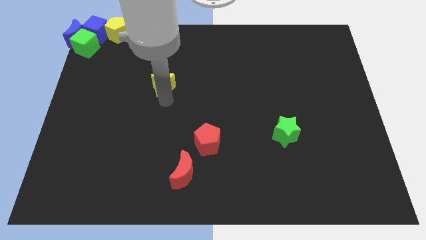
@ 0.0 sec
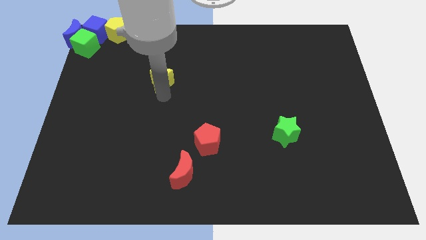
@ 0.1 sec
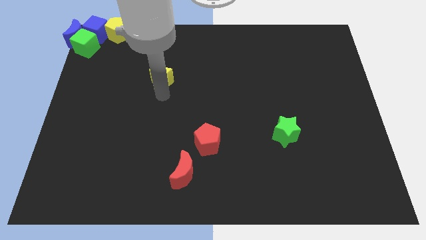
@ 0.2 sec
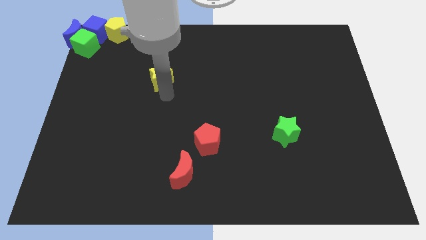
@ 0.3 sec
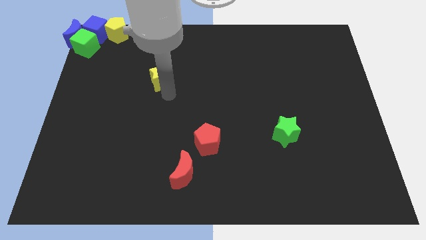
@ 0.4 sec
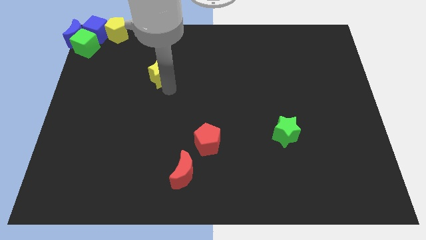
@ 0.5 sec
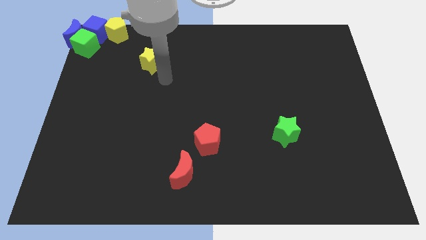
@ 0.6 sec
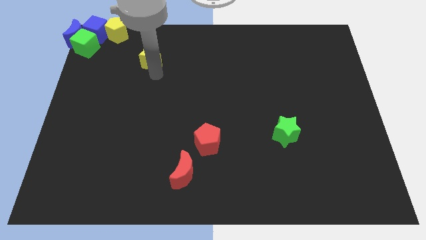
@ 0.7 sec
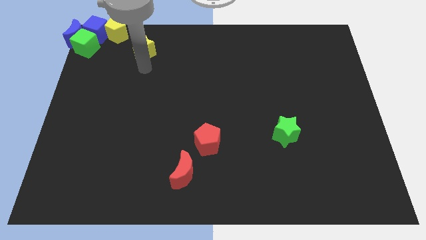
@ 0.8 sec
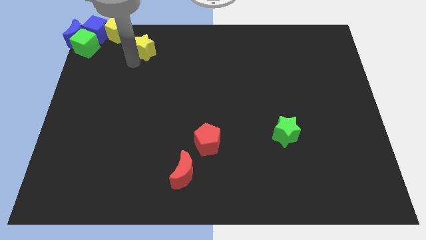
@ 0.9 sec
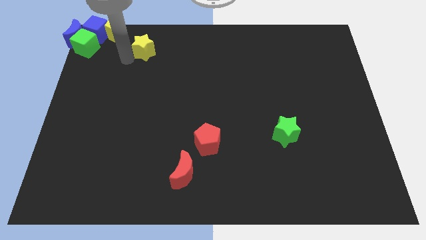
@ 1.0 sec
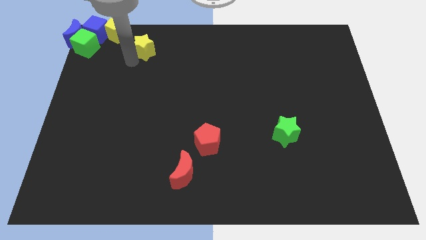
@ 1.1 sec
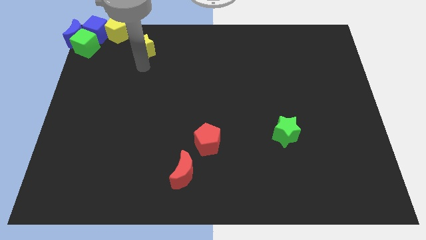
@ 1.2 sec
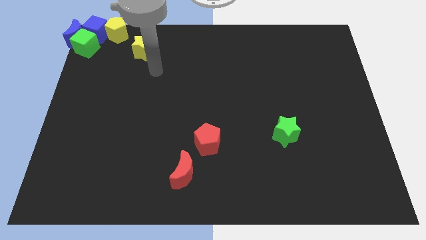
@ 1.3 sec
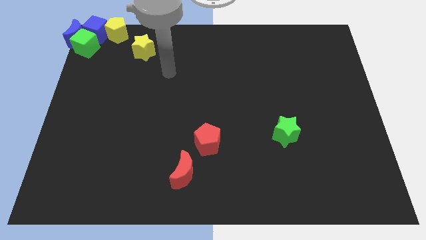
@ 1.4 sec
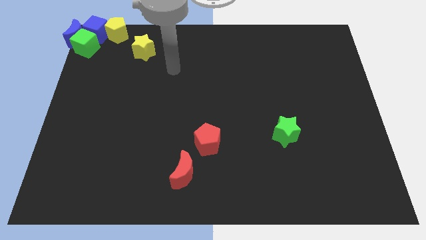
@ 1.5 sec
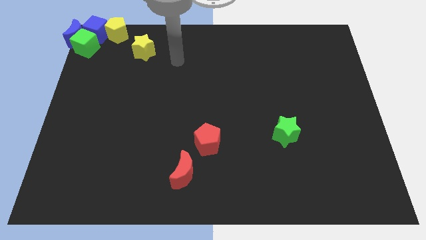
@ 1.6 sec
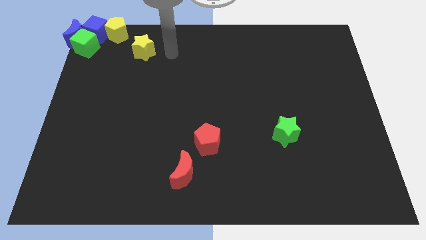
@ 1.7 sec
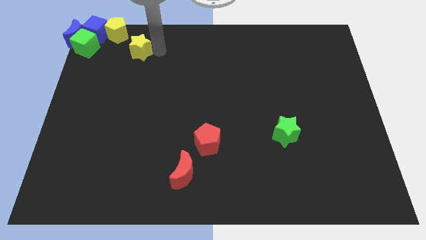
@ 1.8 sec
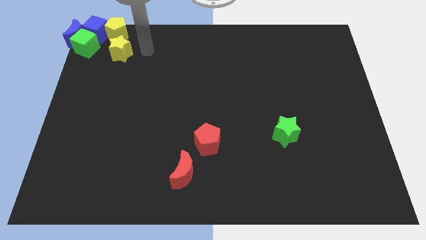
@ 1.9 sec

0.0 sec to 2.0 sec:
place the yellow star at the bottom of the yellow pentagon

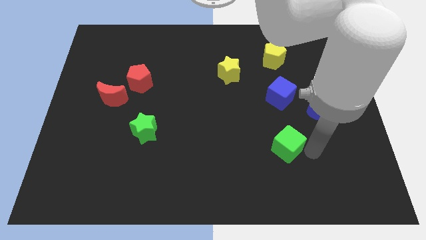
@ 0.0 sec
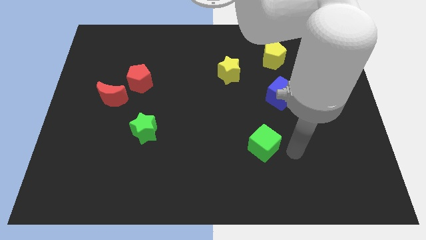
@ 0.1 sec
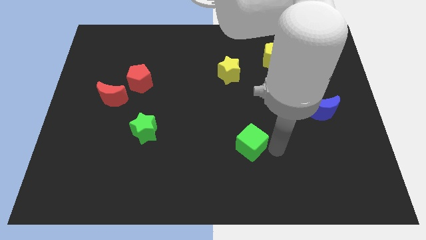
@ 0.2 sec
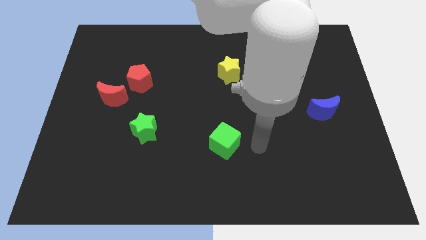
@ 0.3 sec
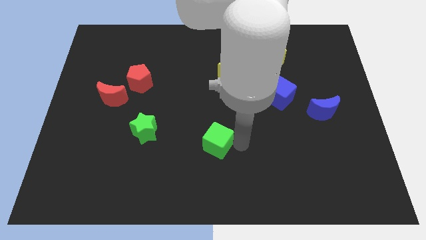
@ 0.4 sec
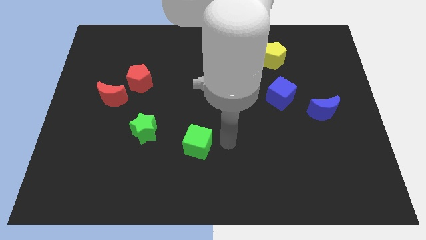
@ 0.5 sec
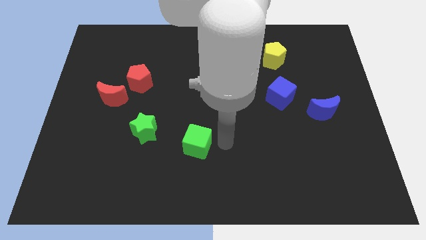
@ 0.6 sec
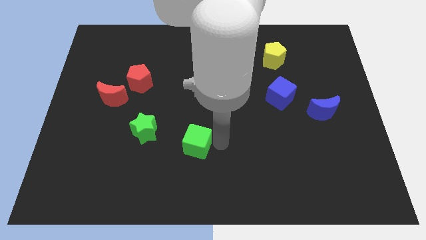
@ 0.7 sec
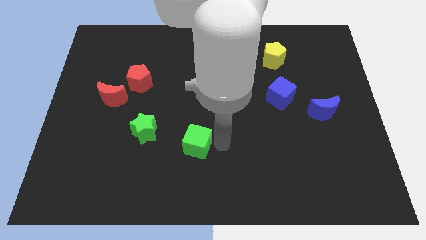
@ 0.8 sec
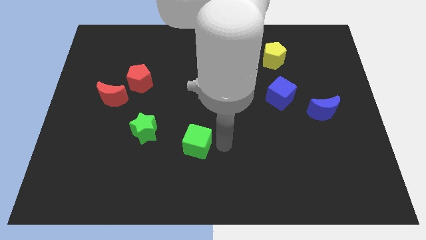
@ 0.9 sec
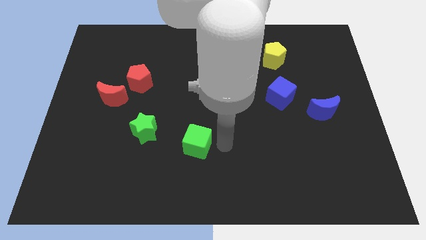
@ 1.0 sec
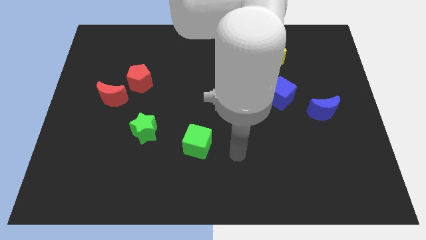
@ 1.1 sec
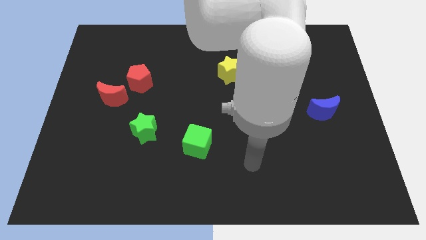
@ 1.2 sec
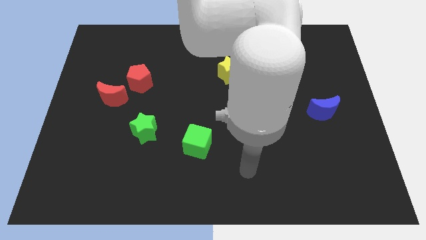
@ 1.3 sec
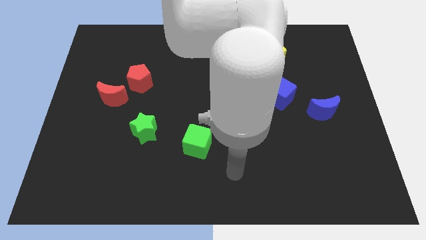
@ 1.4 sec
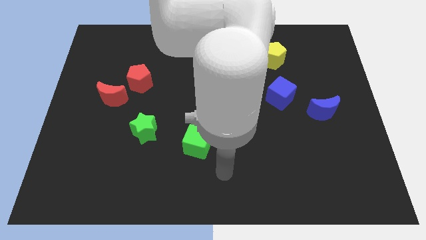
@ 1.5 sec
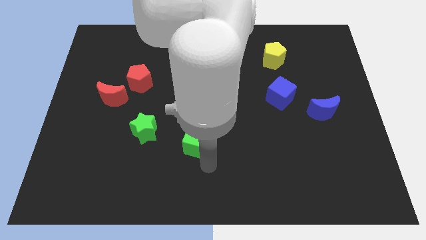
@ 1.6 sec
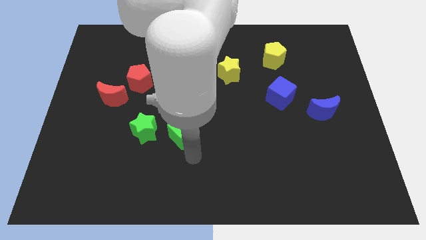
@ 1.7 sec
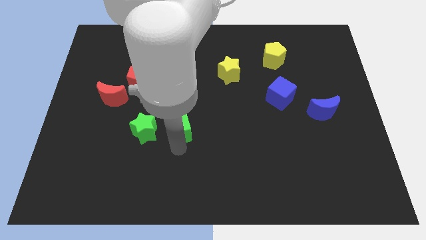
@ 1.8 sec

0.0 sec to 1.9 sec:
push the green cube to the right of the green star

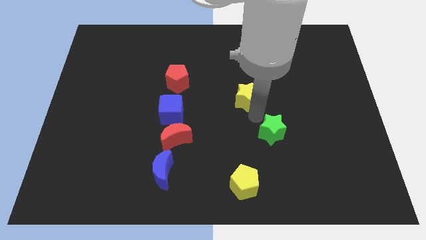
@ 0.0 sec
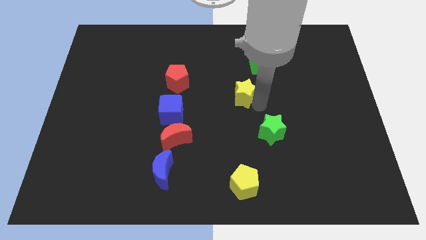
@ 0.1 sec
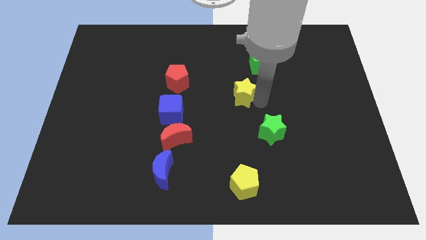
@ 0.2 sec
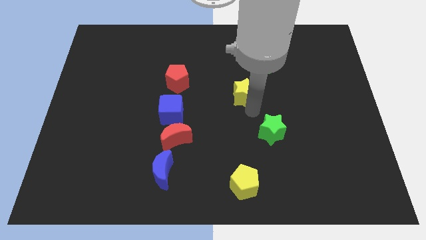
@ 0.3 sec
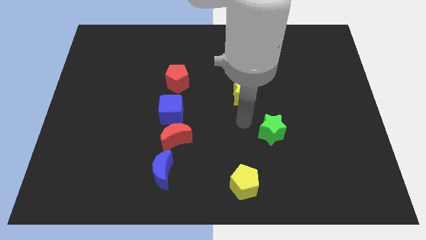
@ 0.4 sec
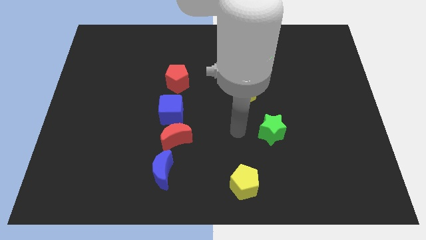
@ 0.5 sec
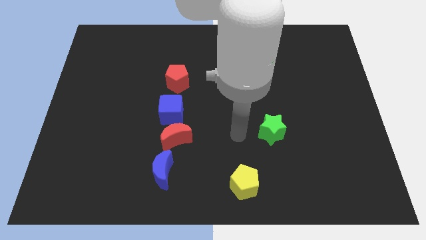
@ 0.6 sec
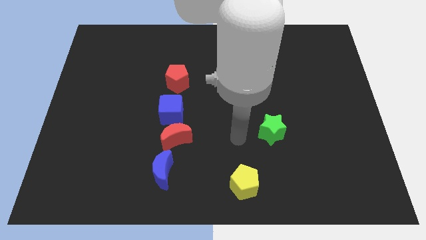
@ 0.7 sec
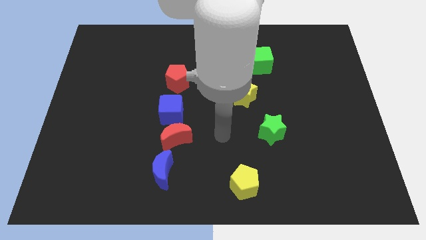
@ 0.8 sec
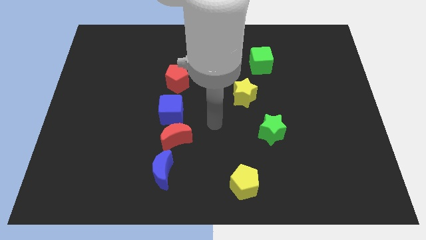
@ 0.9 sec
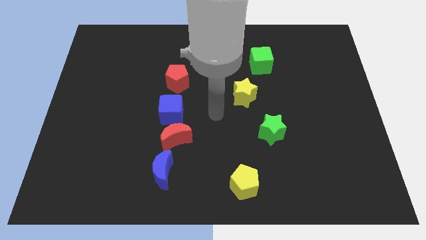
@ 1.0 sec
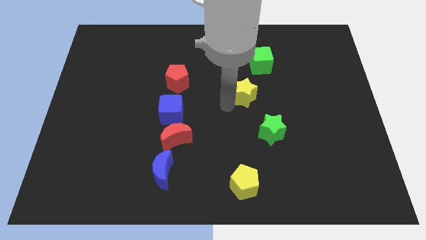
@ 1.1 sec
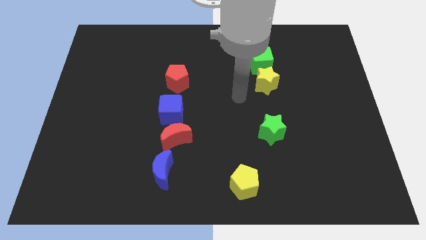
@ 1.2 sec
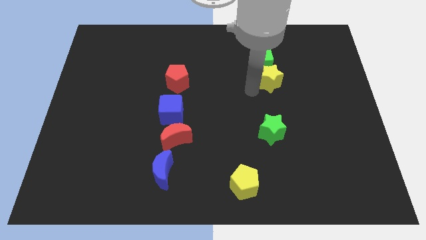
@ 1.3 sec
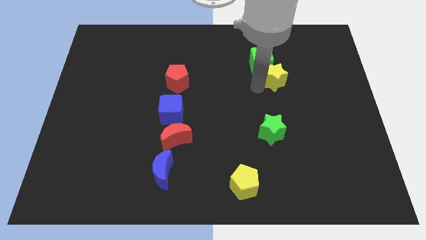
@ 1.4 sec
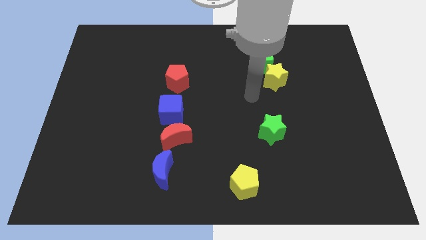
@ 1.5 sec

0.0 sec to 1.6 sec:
push the yellow star towards the bottom side of the green cube

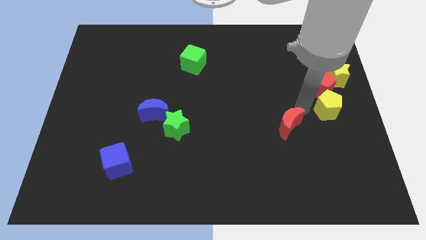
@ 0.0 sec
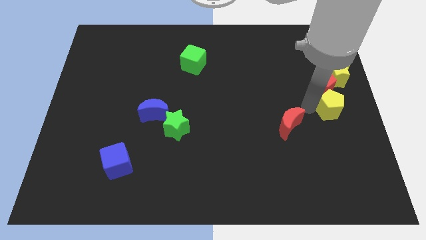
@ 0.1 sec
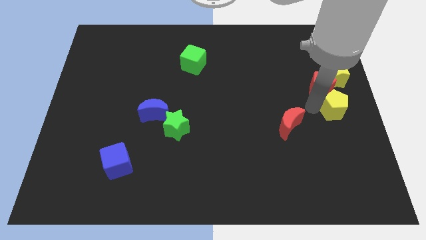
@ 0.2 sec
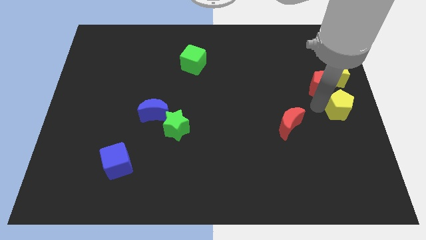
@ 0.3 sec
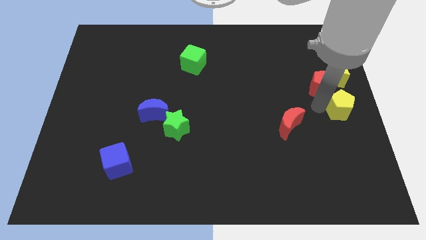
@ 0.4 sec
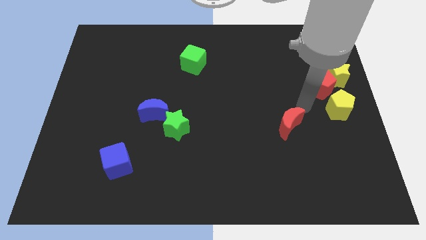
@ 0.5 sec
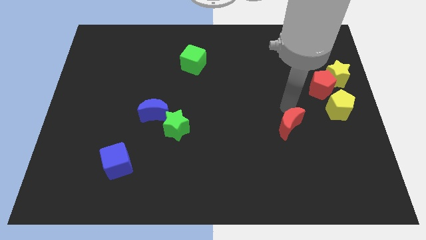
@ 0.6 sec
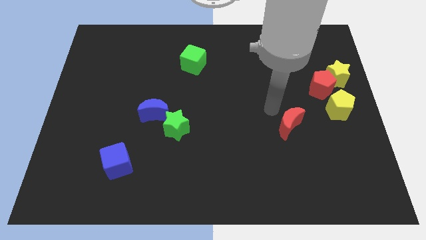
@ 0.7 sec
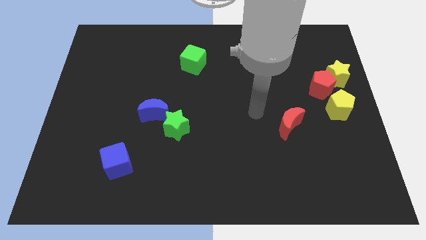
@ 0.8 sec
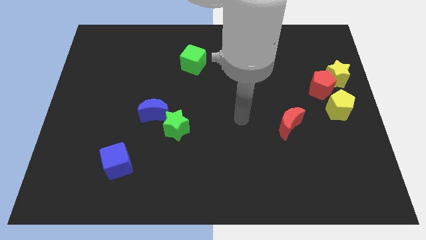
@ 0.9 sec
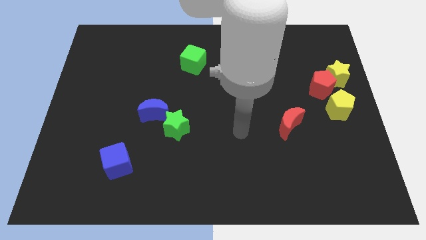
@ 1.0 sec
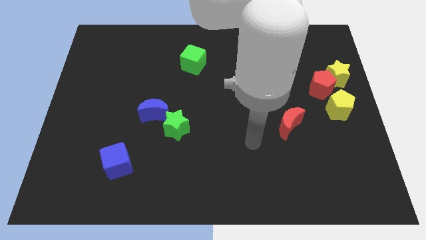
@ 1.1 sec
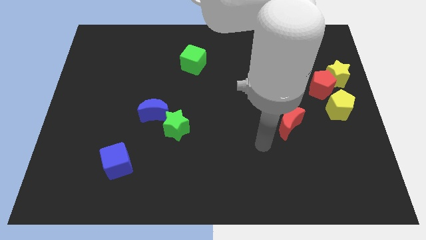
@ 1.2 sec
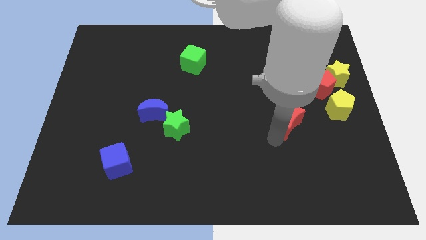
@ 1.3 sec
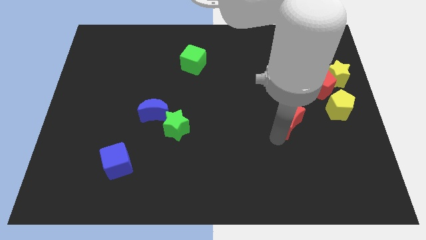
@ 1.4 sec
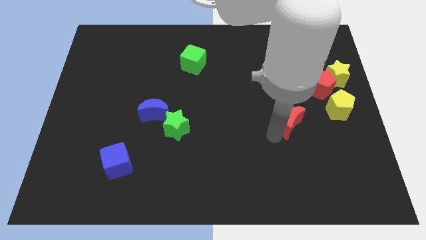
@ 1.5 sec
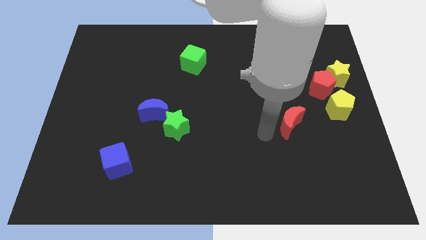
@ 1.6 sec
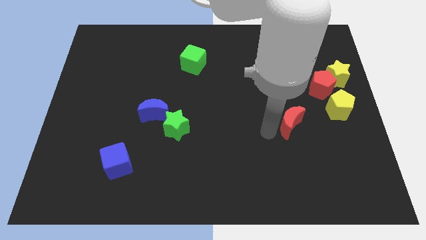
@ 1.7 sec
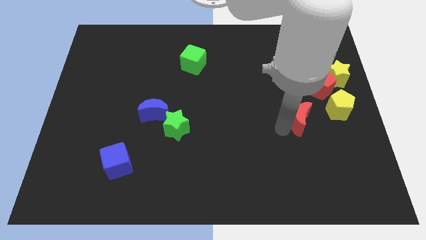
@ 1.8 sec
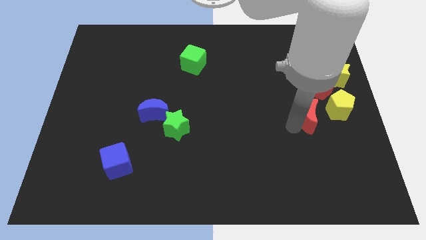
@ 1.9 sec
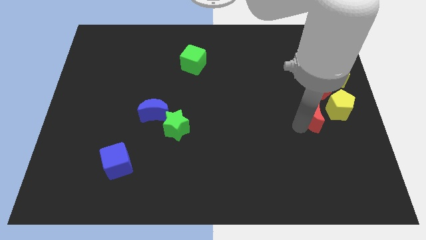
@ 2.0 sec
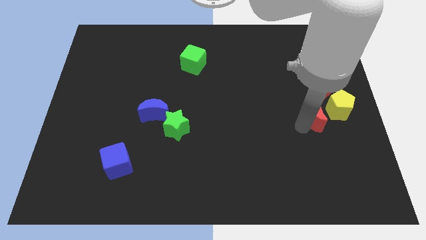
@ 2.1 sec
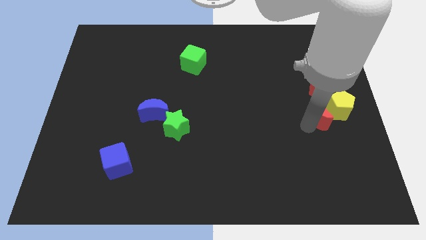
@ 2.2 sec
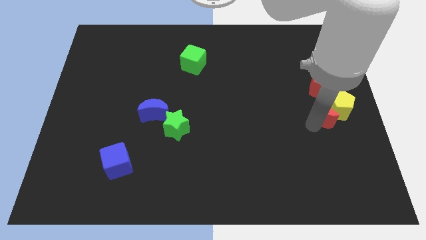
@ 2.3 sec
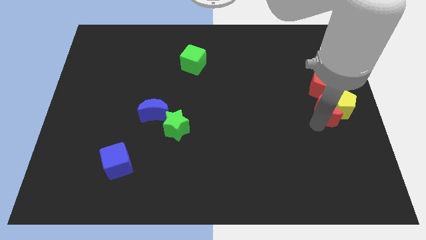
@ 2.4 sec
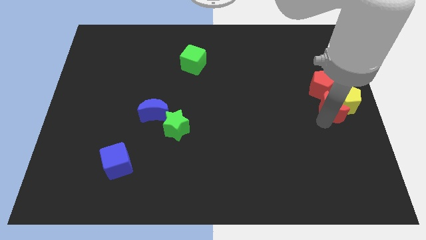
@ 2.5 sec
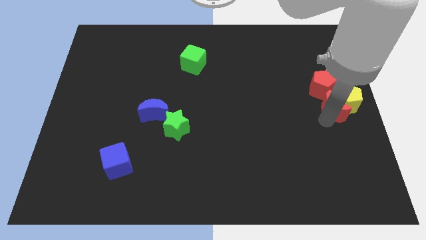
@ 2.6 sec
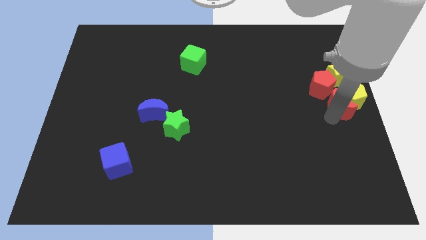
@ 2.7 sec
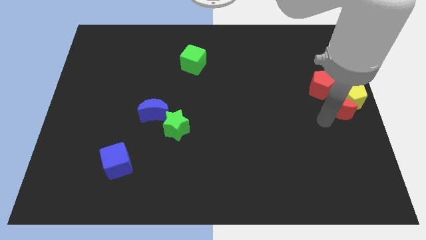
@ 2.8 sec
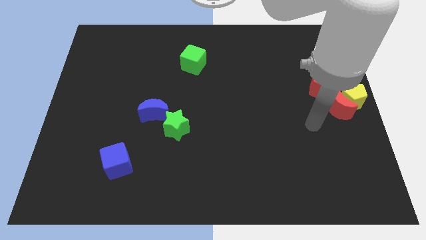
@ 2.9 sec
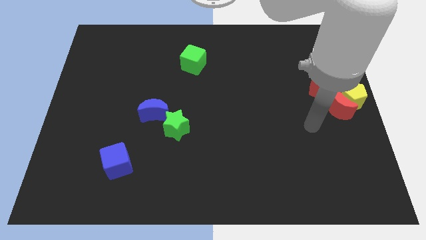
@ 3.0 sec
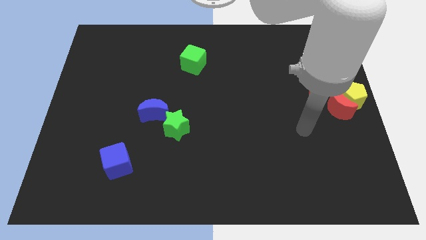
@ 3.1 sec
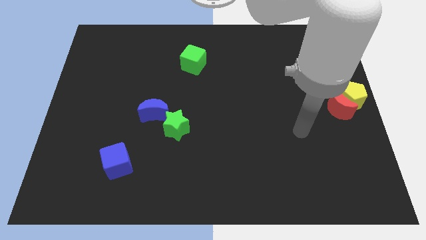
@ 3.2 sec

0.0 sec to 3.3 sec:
move the red moon into the yellow pentagon
